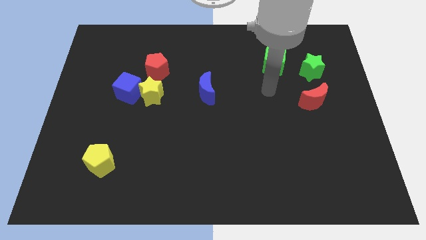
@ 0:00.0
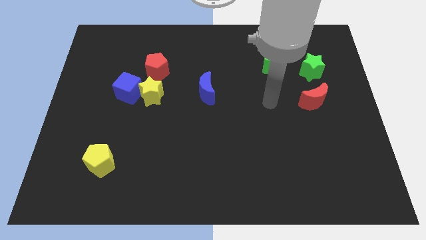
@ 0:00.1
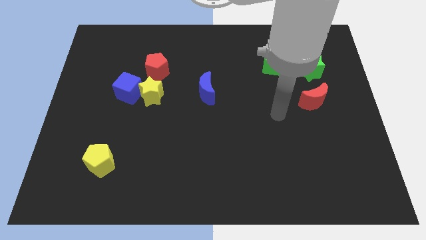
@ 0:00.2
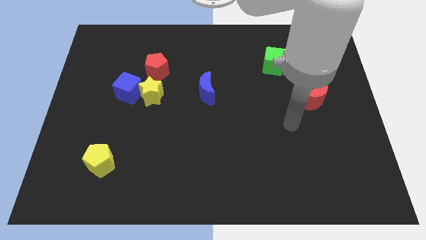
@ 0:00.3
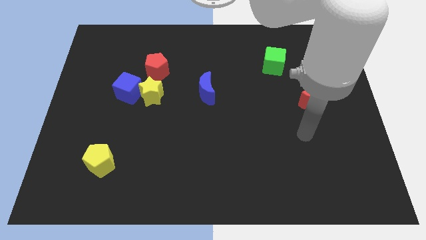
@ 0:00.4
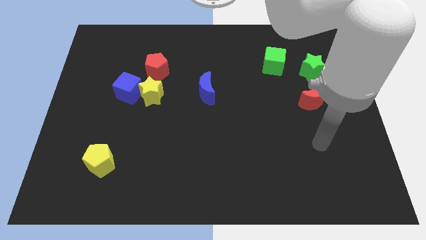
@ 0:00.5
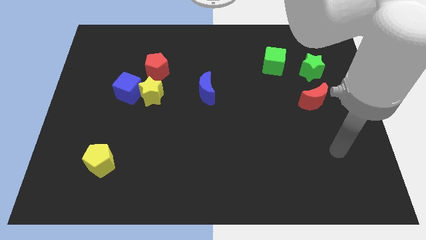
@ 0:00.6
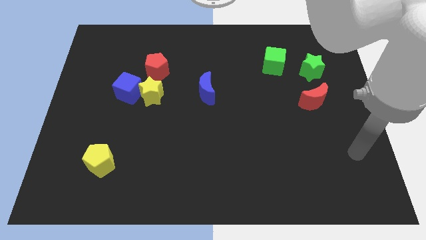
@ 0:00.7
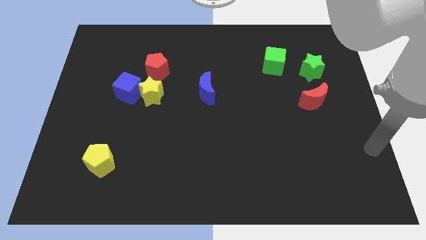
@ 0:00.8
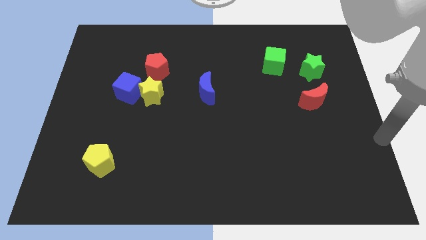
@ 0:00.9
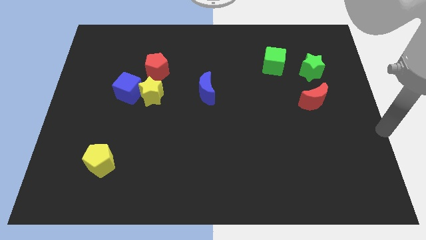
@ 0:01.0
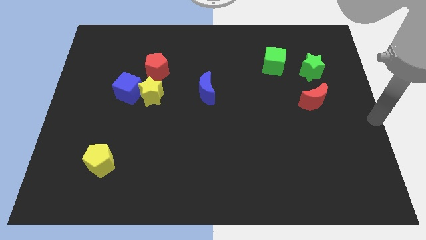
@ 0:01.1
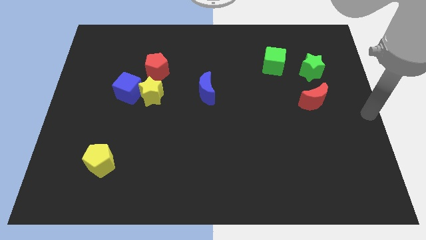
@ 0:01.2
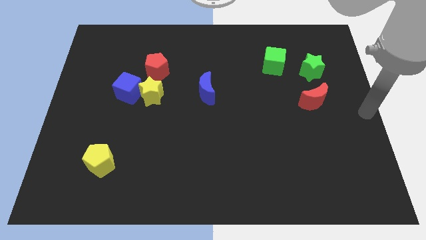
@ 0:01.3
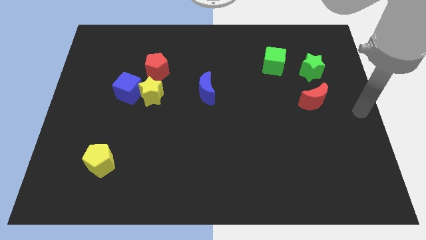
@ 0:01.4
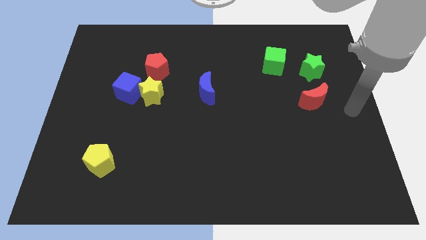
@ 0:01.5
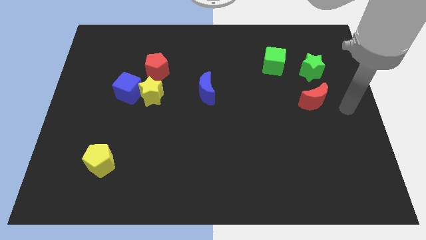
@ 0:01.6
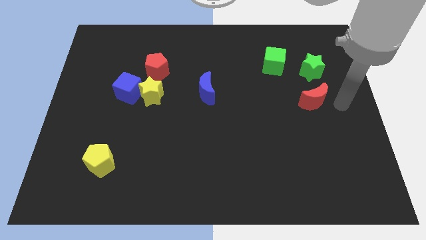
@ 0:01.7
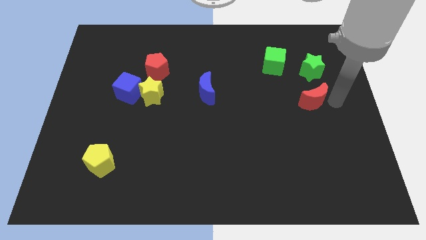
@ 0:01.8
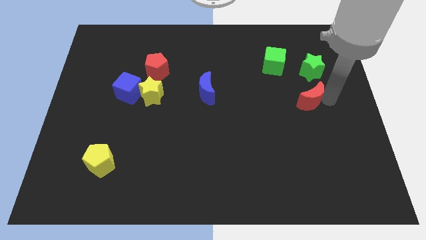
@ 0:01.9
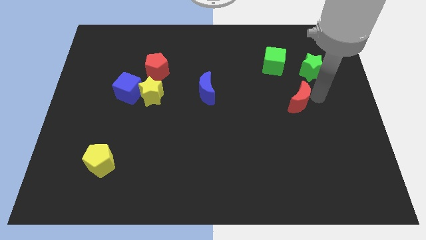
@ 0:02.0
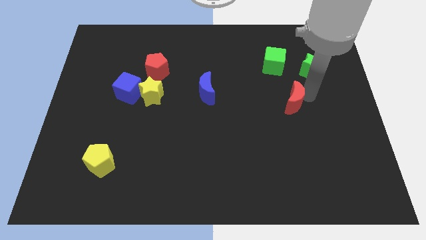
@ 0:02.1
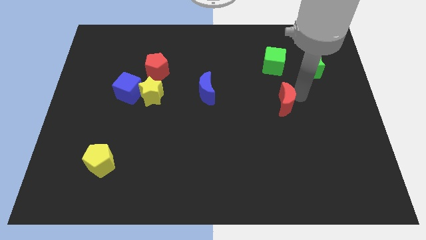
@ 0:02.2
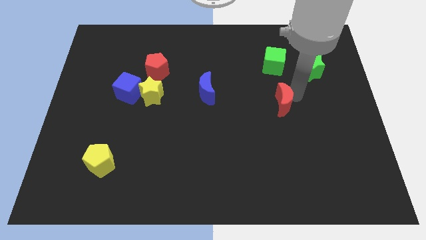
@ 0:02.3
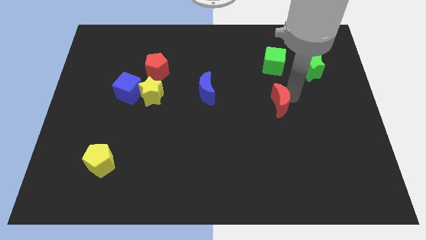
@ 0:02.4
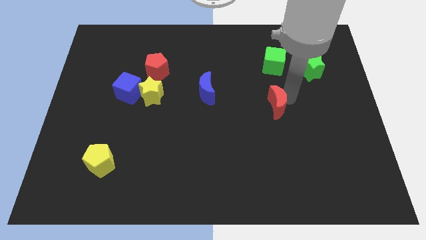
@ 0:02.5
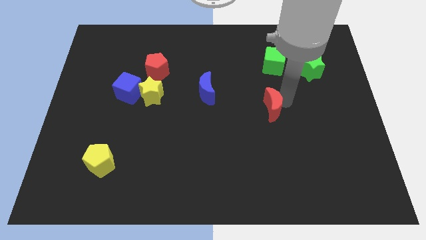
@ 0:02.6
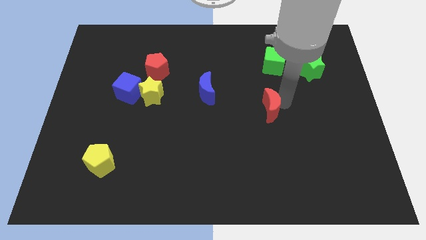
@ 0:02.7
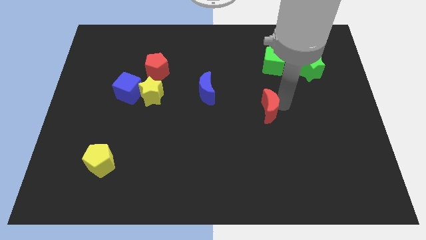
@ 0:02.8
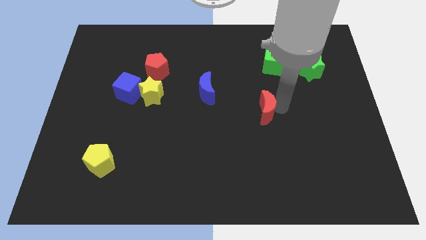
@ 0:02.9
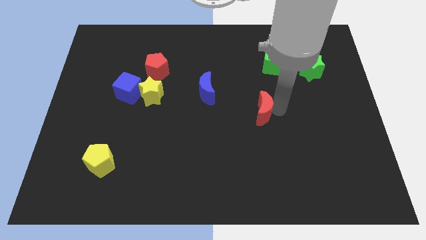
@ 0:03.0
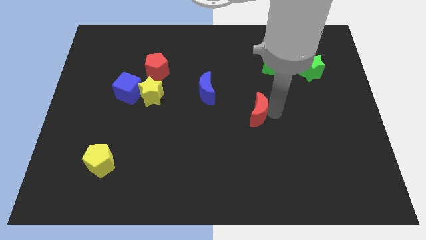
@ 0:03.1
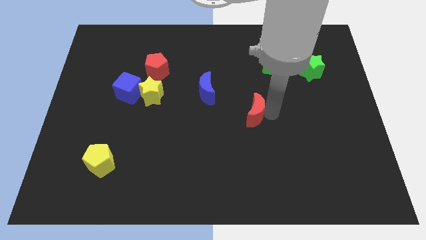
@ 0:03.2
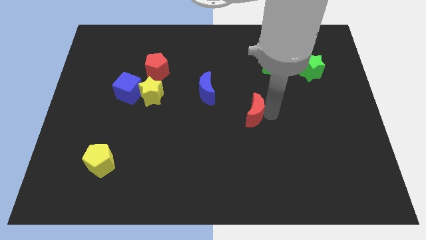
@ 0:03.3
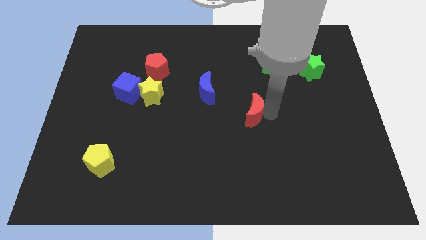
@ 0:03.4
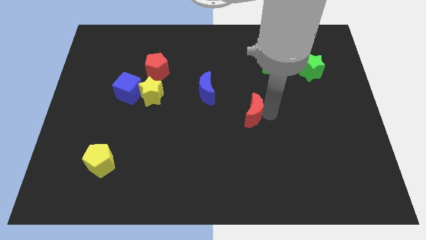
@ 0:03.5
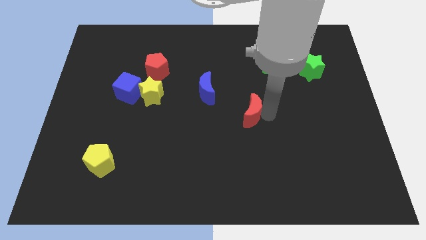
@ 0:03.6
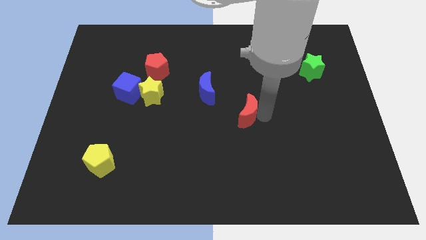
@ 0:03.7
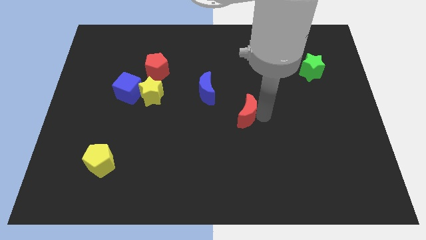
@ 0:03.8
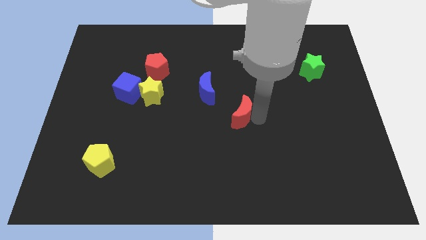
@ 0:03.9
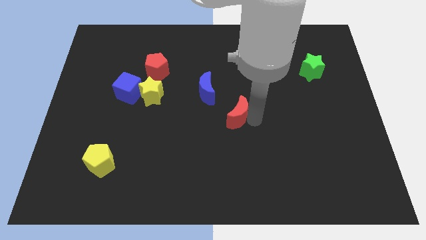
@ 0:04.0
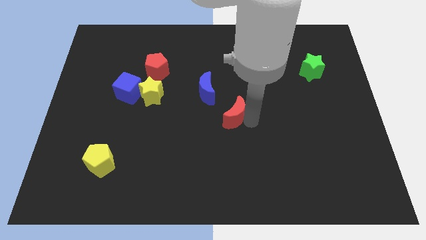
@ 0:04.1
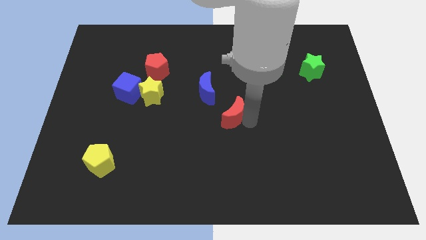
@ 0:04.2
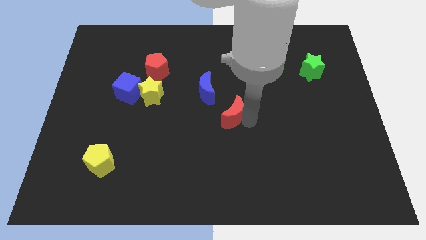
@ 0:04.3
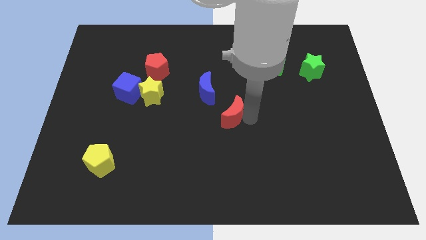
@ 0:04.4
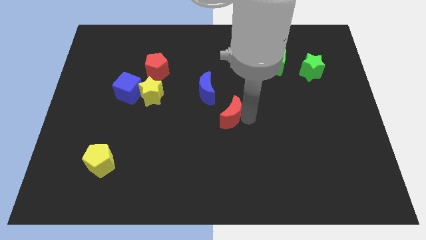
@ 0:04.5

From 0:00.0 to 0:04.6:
push the red crescent to the center of the board

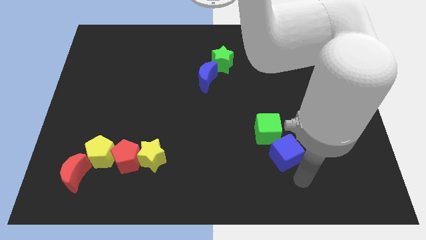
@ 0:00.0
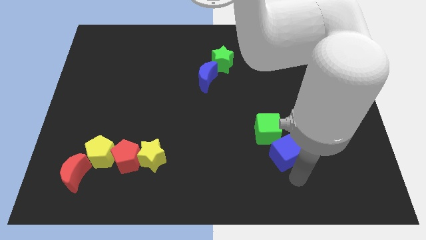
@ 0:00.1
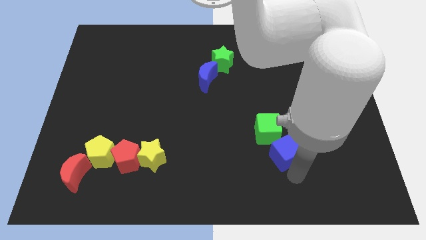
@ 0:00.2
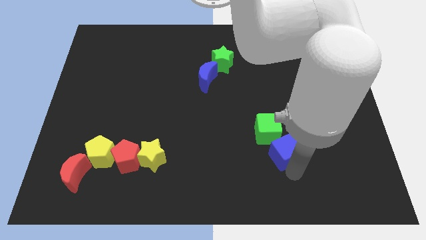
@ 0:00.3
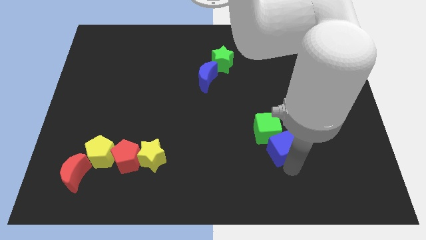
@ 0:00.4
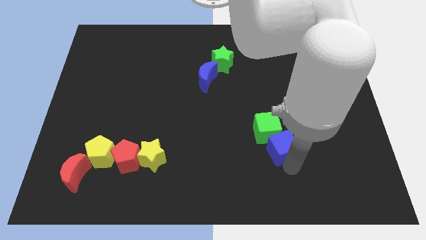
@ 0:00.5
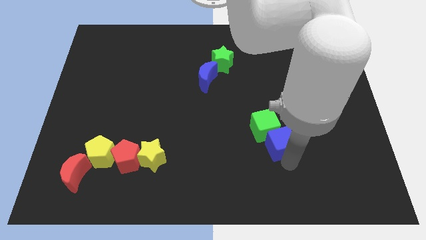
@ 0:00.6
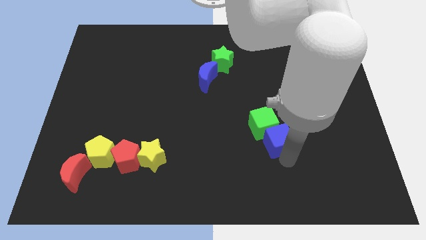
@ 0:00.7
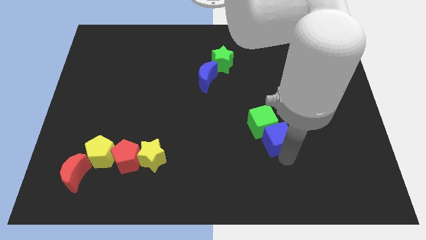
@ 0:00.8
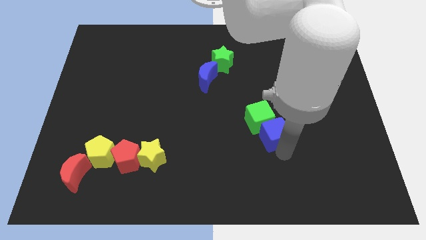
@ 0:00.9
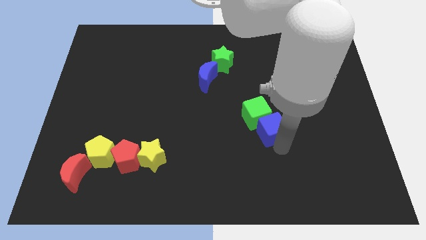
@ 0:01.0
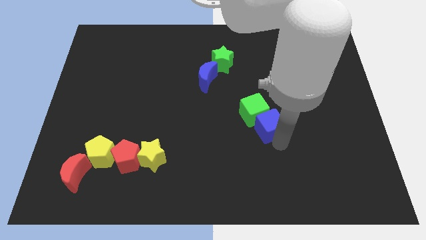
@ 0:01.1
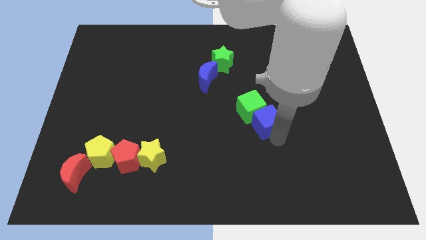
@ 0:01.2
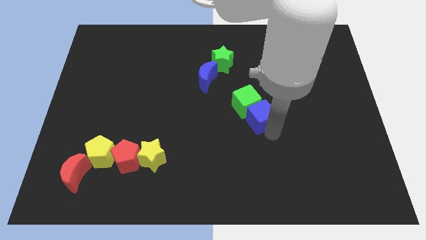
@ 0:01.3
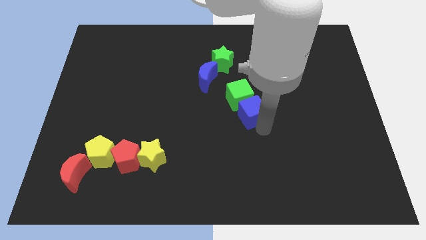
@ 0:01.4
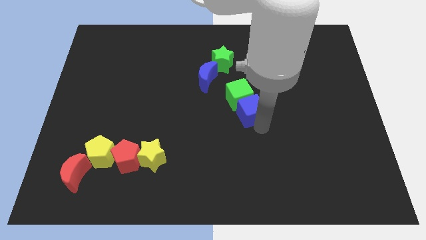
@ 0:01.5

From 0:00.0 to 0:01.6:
push green cube with blue cube slightly to the top of the board

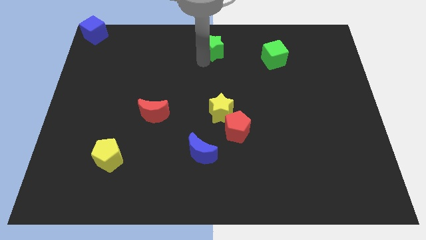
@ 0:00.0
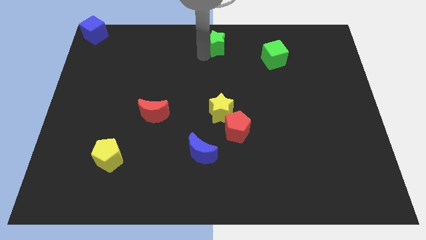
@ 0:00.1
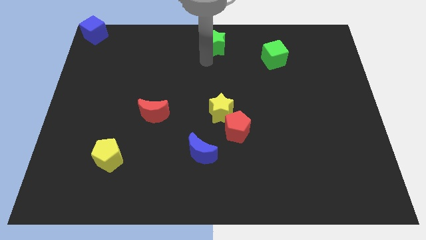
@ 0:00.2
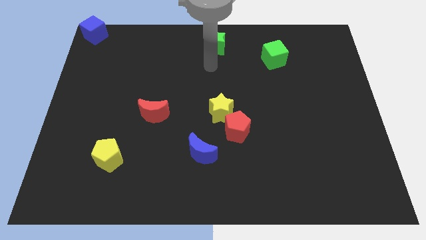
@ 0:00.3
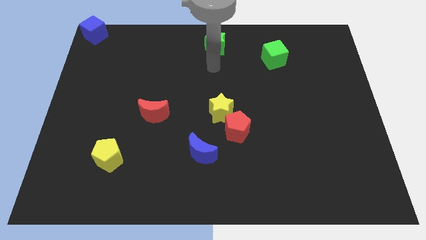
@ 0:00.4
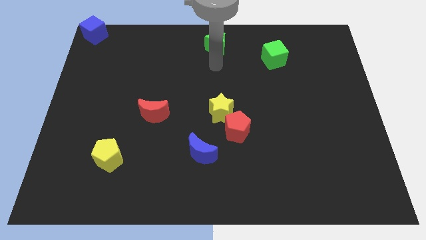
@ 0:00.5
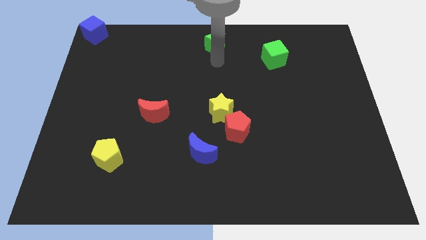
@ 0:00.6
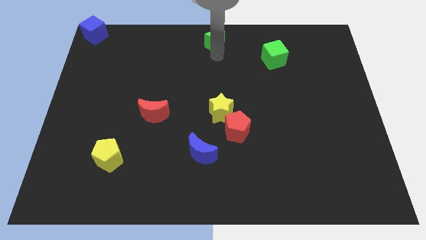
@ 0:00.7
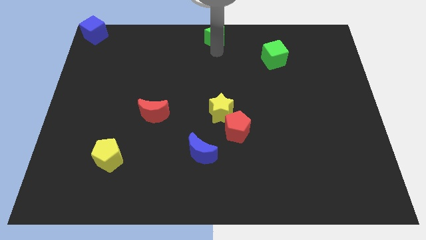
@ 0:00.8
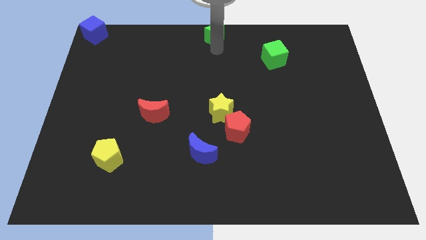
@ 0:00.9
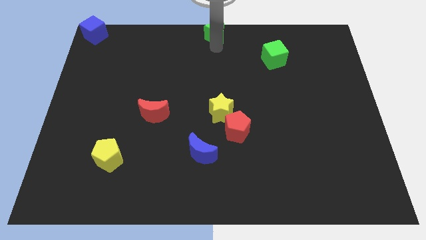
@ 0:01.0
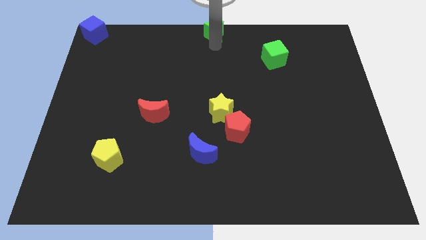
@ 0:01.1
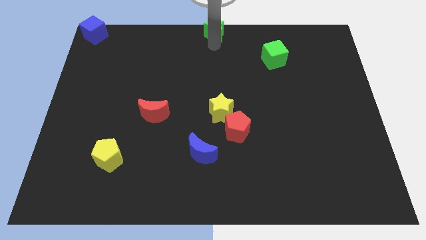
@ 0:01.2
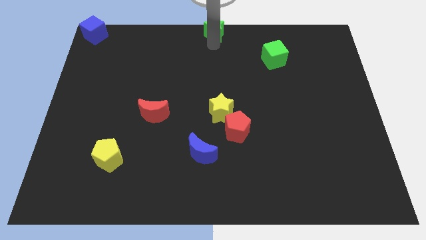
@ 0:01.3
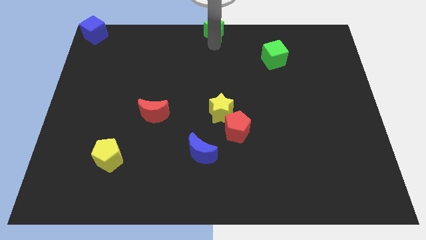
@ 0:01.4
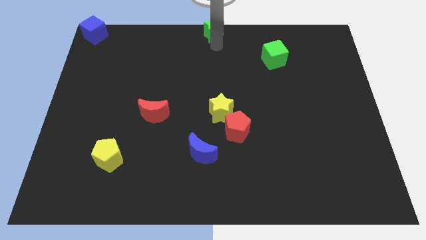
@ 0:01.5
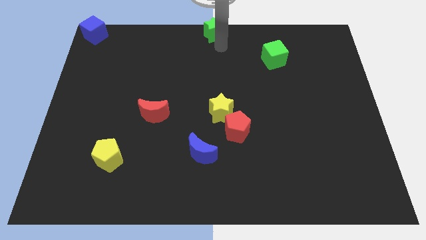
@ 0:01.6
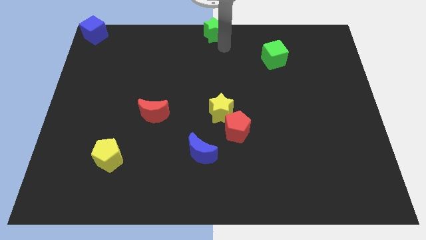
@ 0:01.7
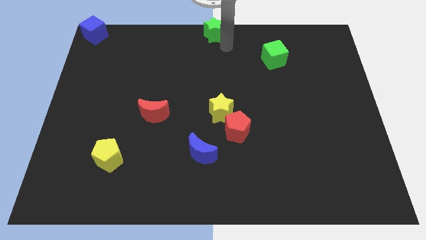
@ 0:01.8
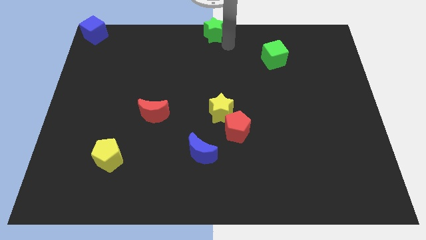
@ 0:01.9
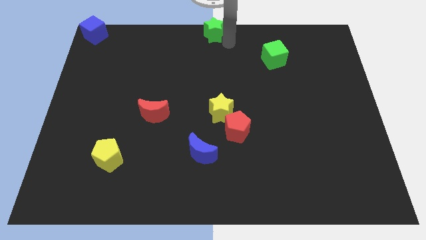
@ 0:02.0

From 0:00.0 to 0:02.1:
place the green star on top of center

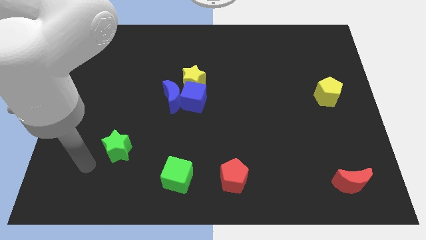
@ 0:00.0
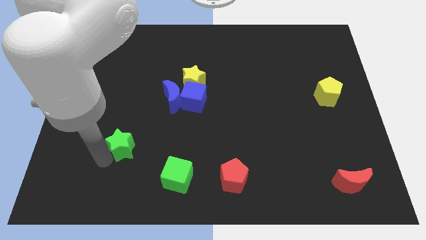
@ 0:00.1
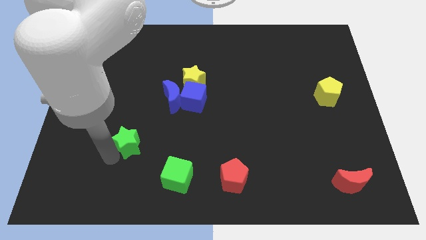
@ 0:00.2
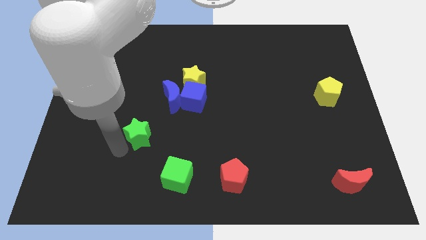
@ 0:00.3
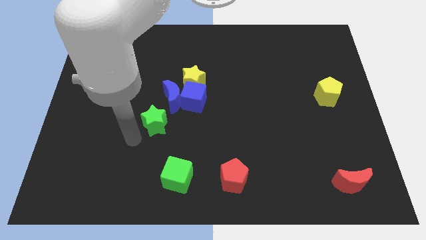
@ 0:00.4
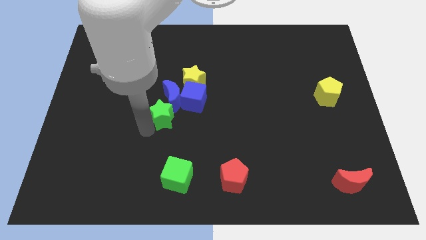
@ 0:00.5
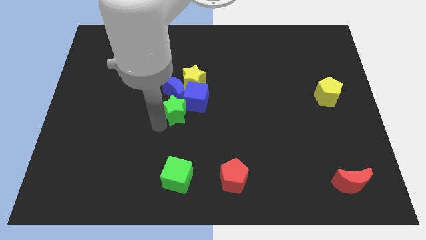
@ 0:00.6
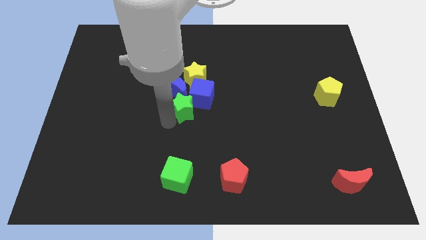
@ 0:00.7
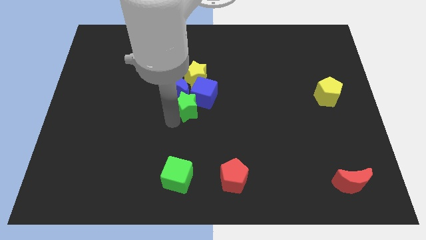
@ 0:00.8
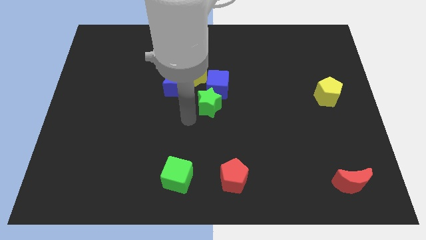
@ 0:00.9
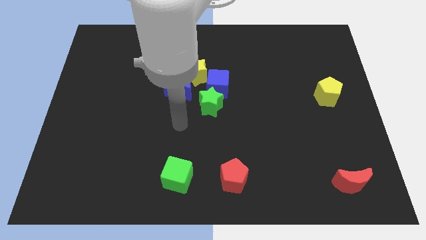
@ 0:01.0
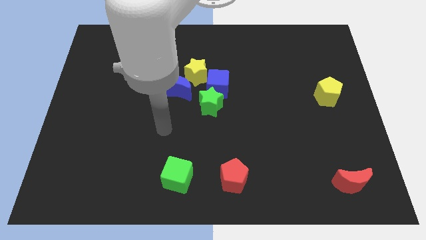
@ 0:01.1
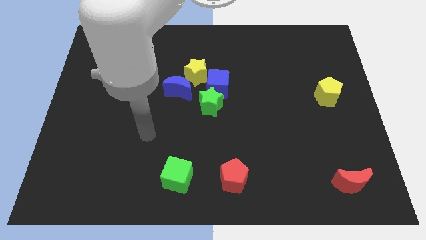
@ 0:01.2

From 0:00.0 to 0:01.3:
push the green star into the blue cube
